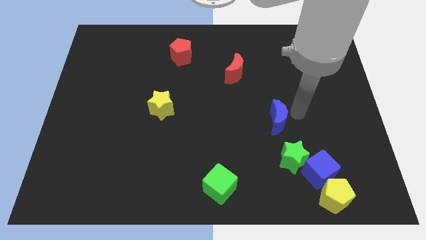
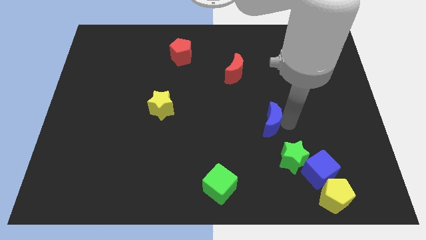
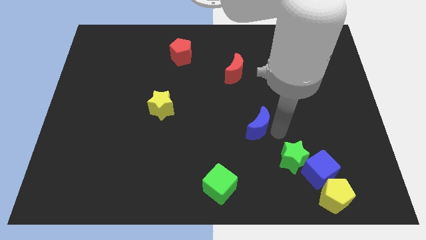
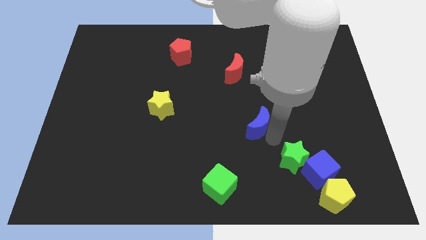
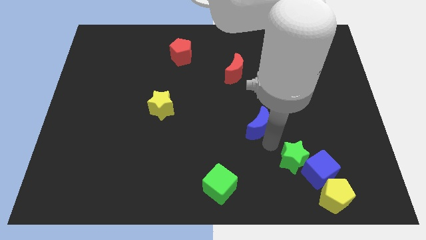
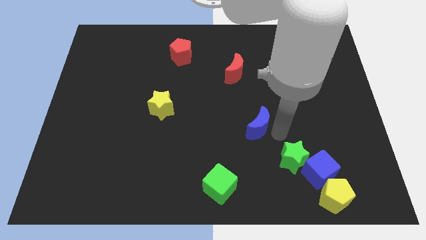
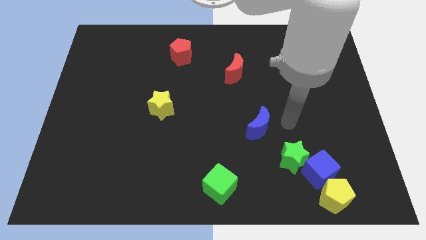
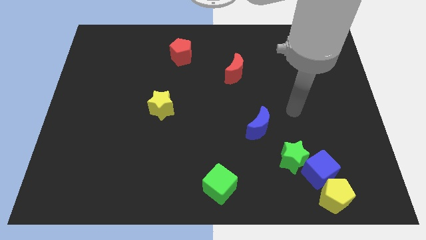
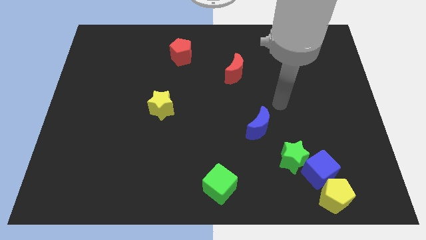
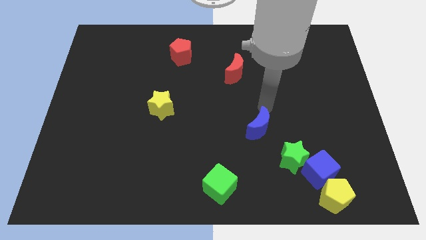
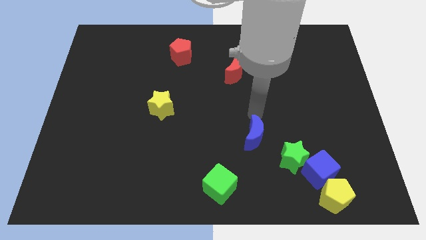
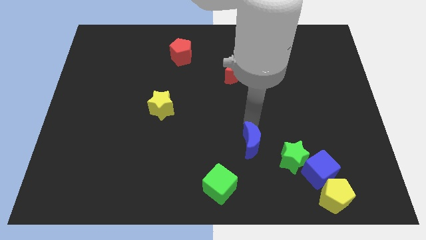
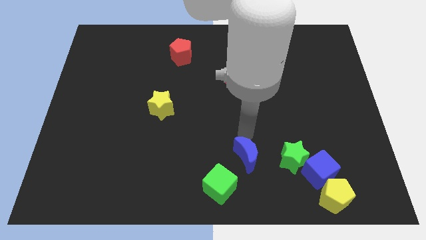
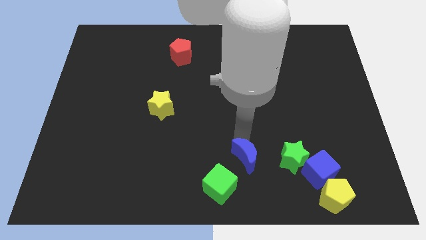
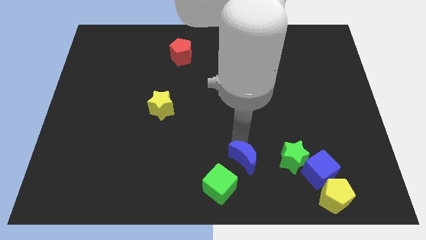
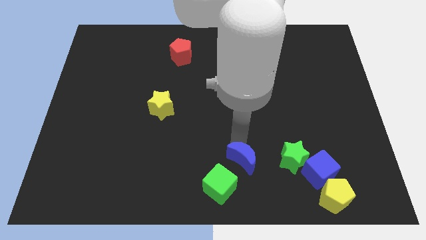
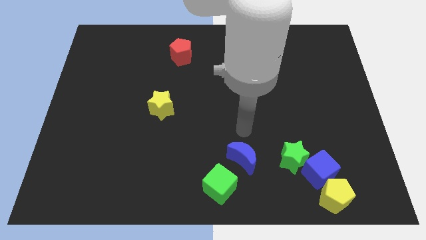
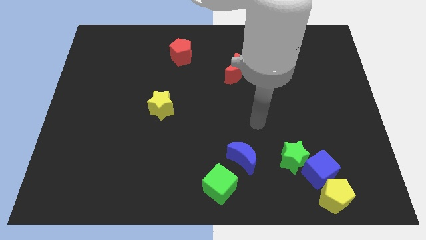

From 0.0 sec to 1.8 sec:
place the blue moon diagonal to the green cube

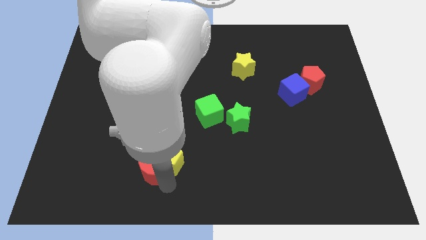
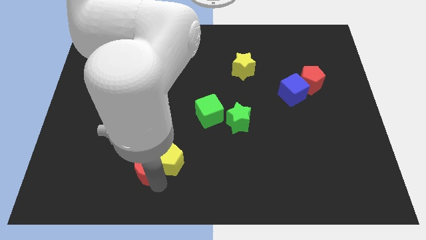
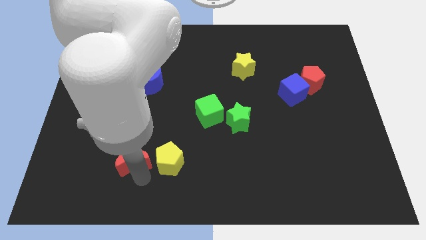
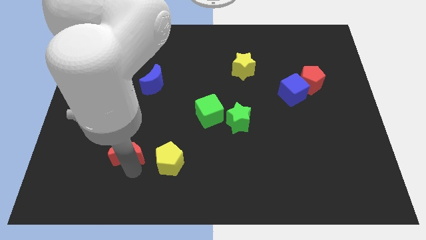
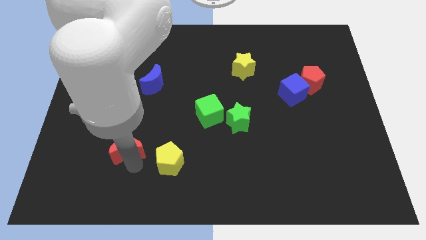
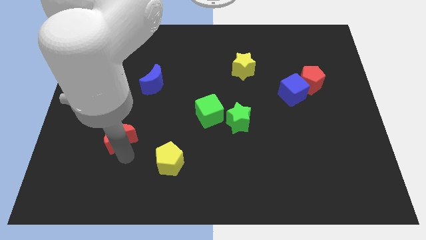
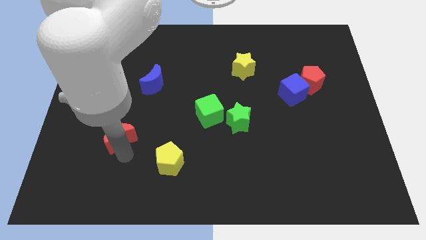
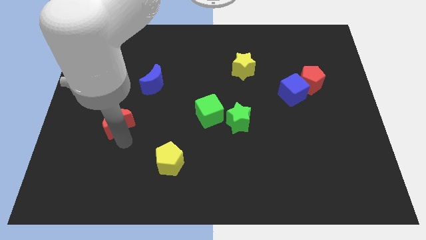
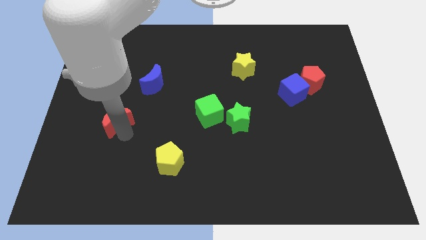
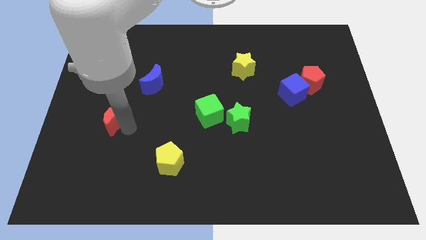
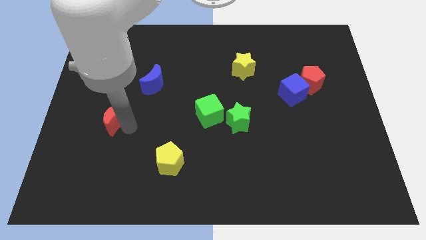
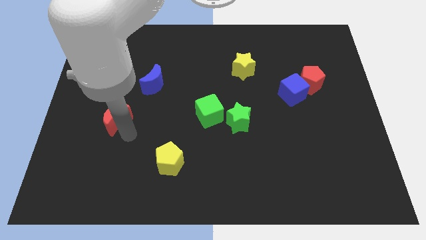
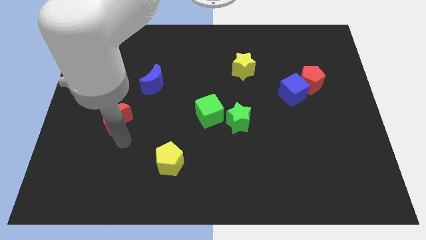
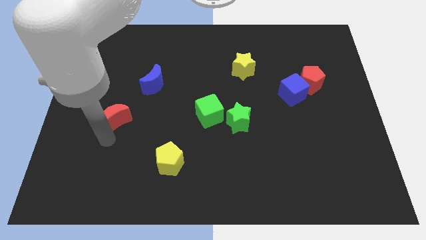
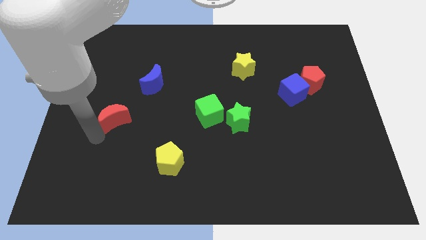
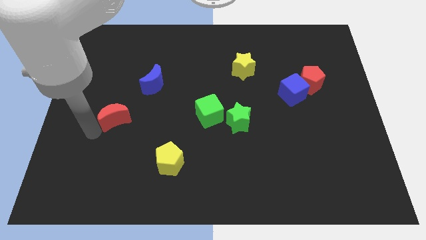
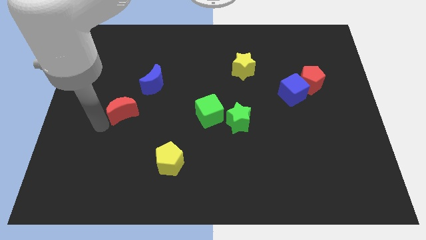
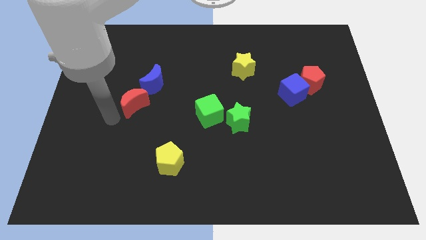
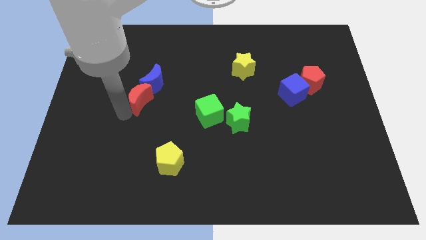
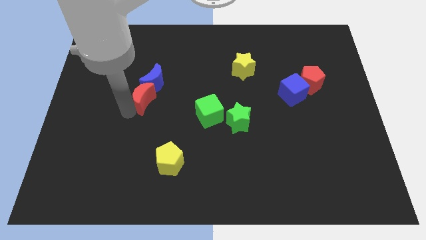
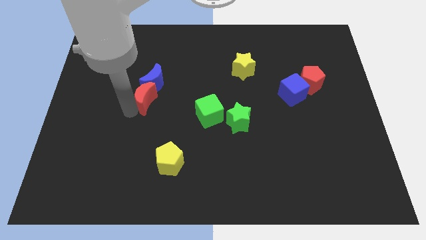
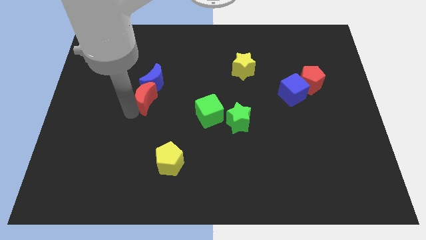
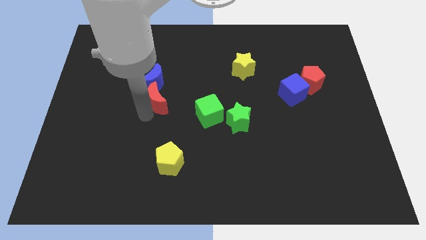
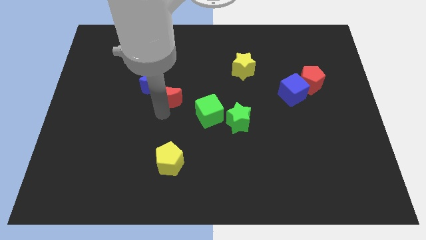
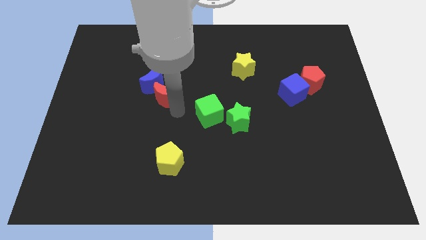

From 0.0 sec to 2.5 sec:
place the red moon in between the blue moon and green cube

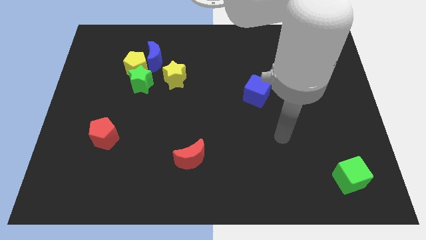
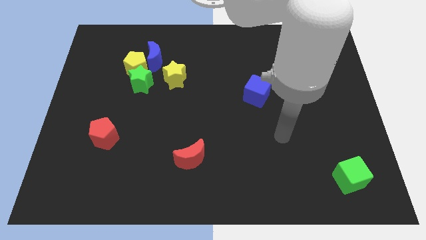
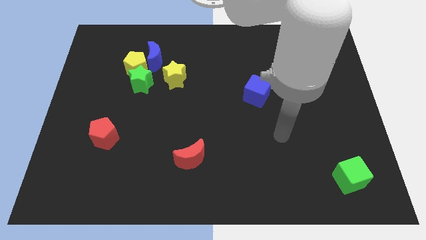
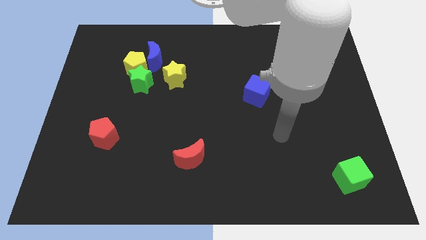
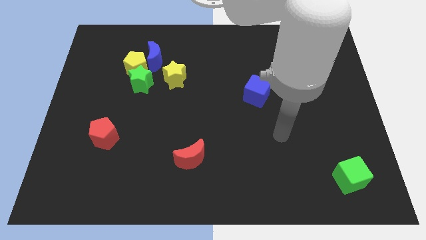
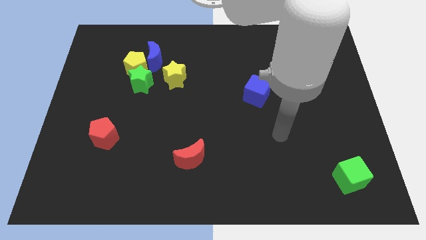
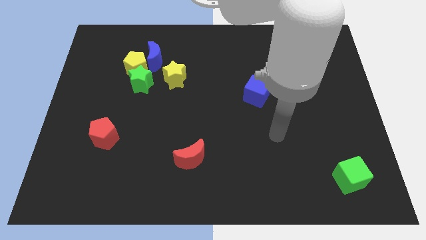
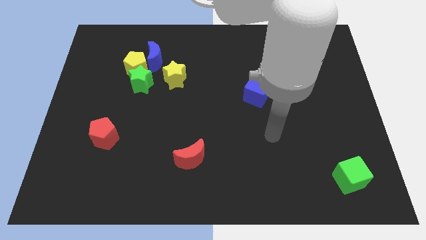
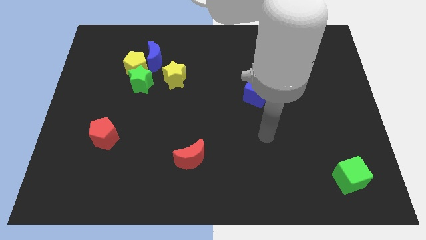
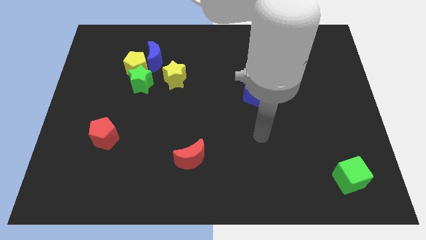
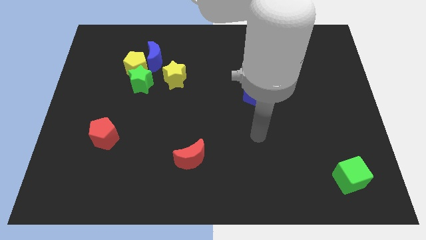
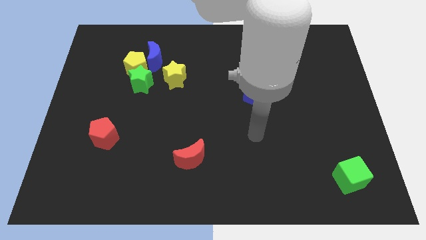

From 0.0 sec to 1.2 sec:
move your arm parallel to the blue cube

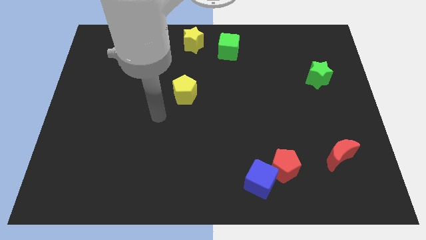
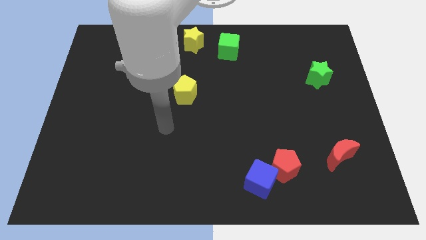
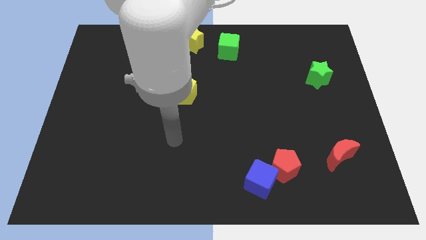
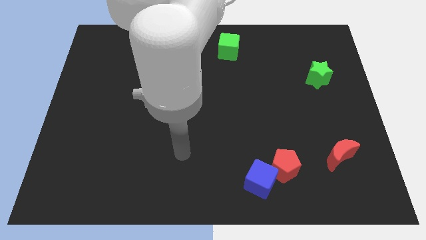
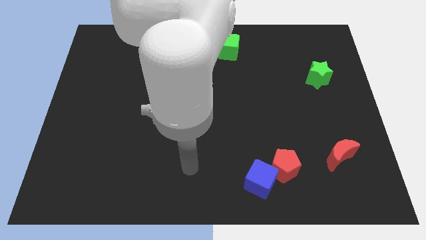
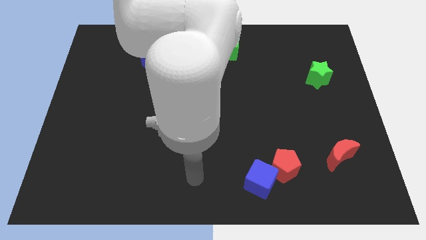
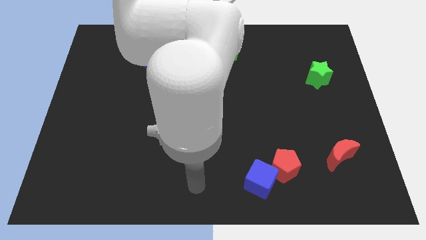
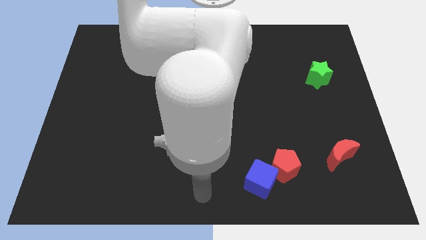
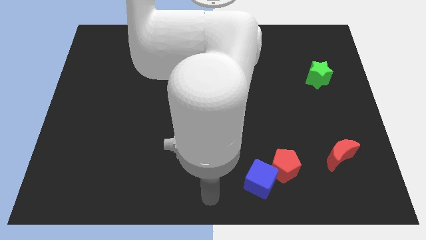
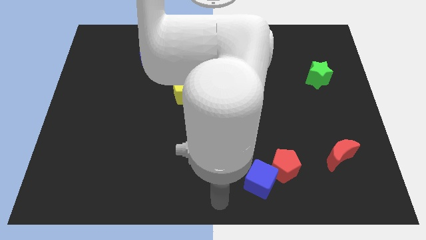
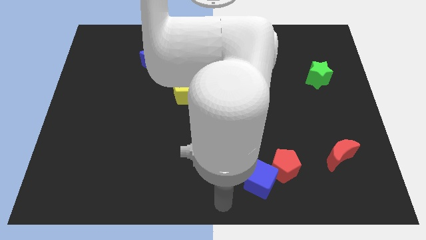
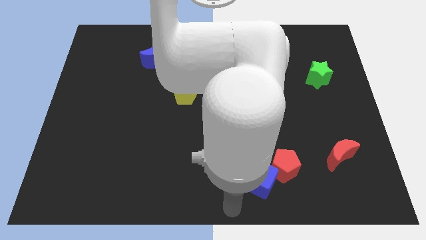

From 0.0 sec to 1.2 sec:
put your hand at the bottom center of the board

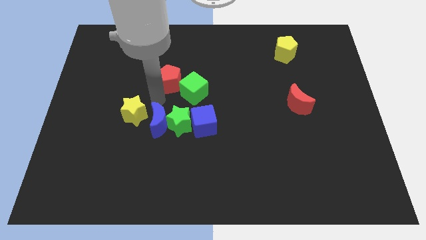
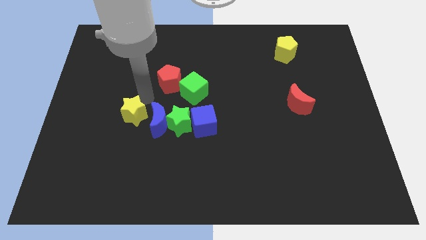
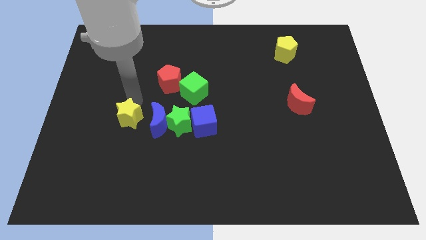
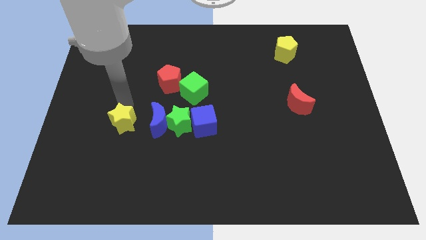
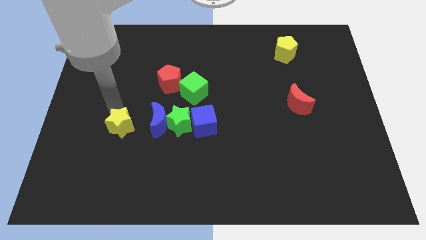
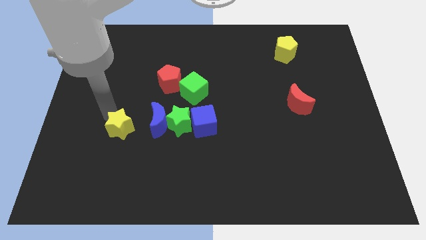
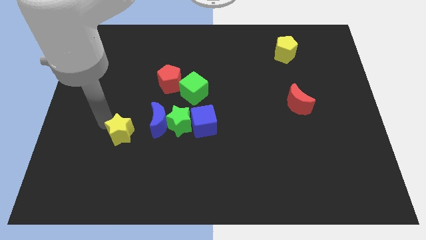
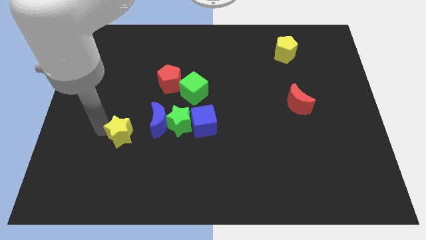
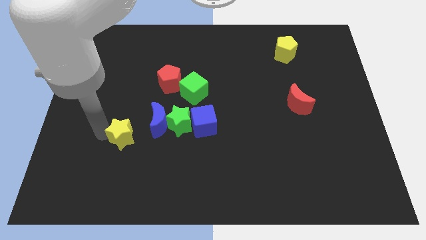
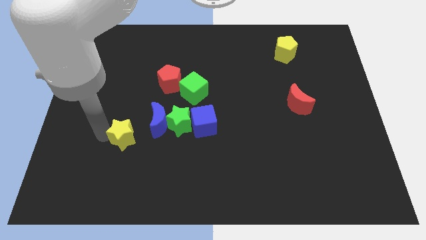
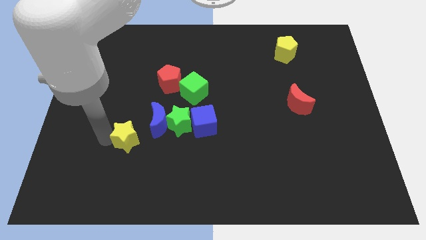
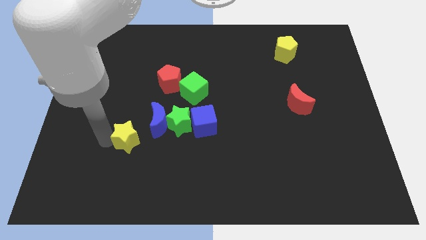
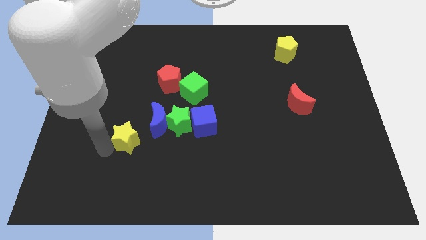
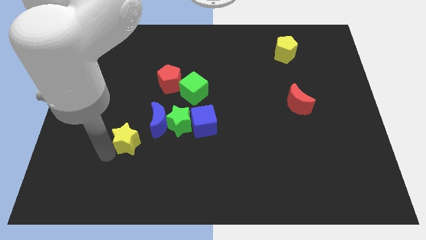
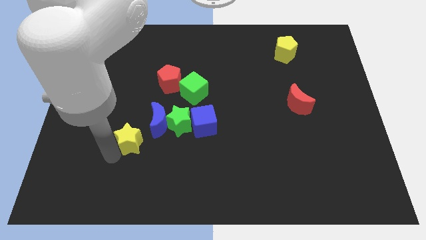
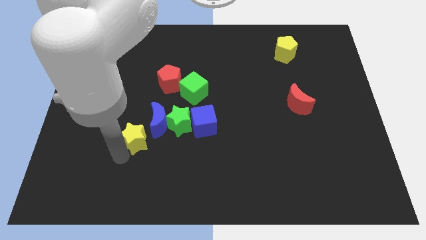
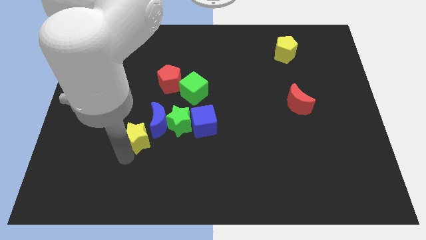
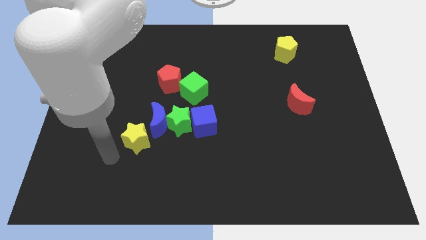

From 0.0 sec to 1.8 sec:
place the yellow star diagonally bottom left to the blue moon

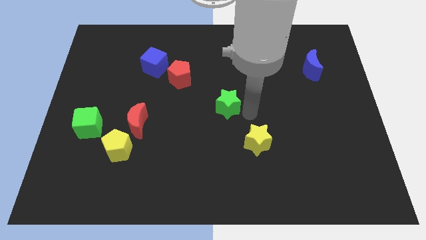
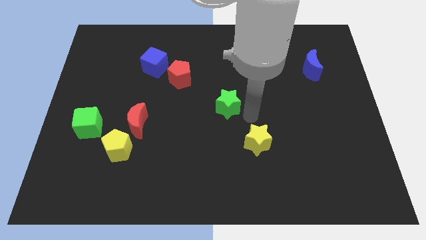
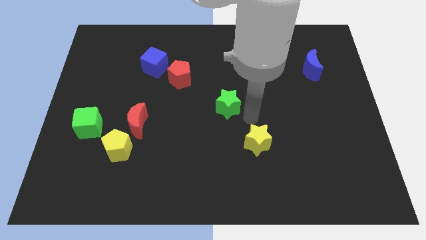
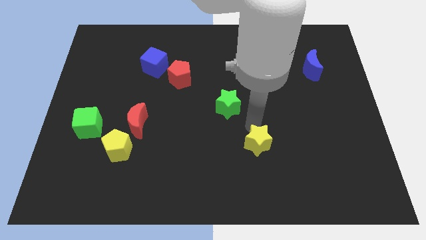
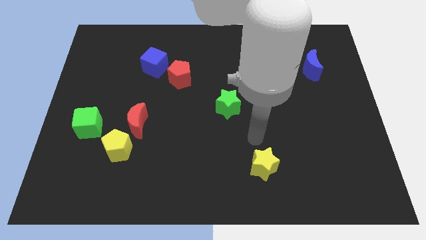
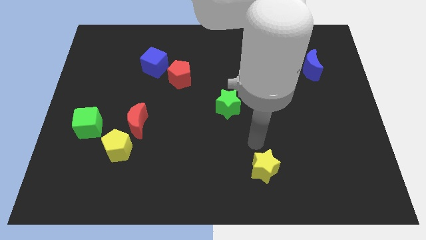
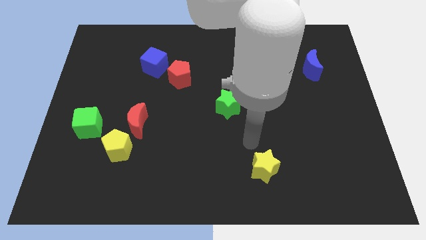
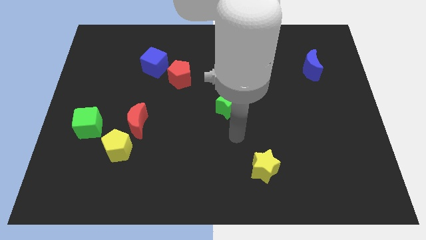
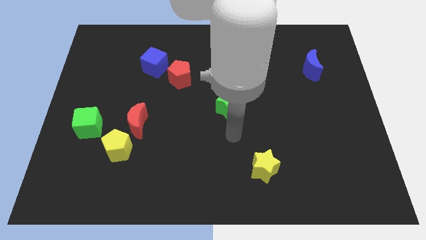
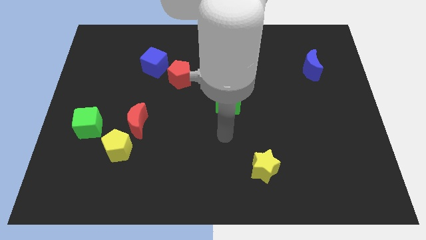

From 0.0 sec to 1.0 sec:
push yellow star slightly towards down
